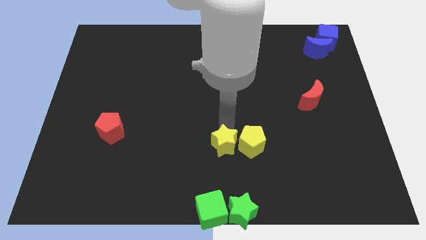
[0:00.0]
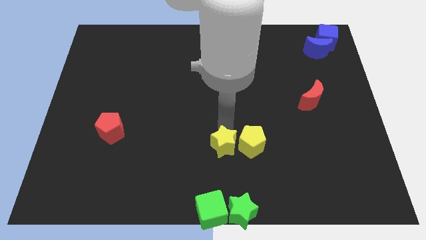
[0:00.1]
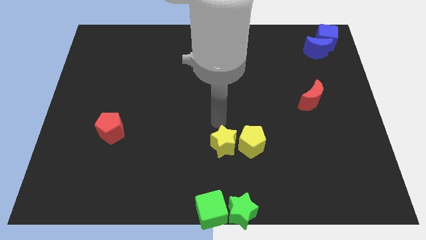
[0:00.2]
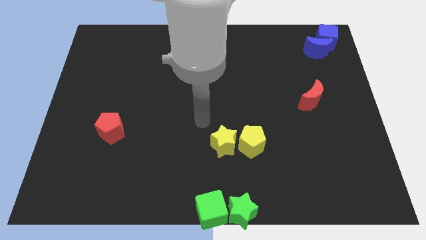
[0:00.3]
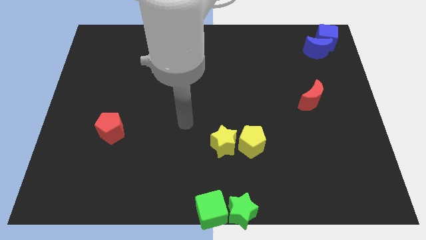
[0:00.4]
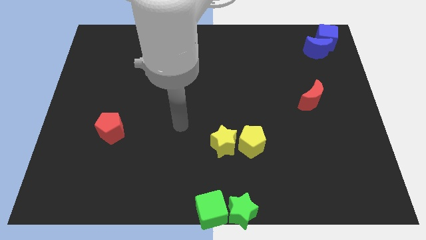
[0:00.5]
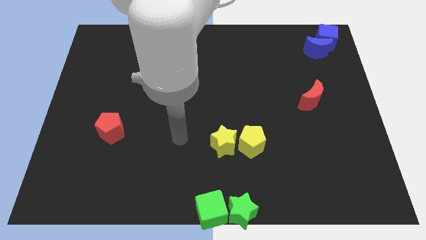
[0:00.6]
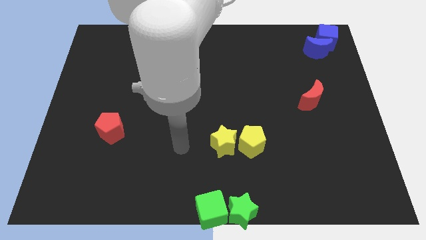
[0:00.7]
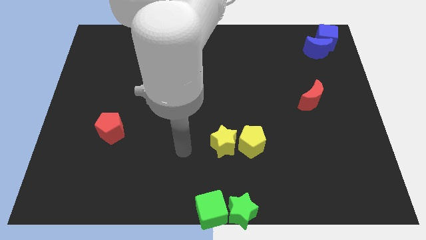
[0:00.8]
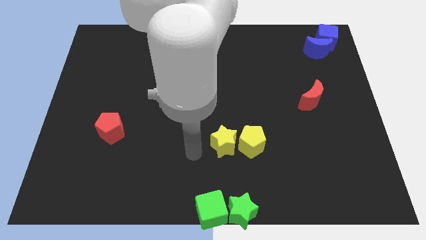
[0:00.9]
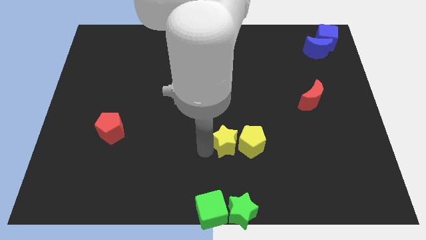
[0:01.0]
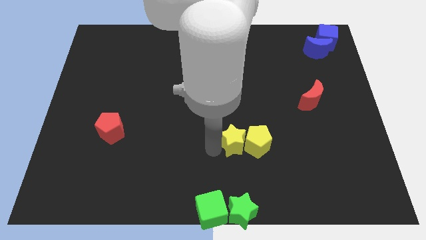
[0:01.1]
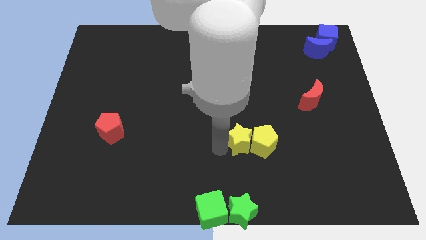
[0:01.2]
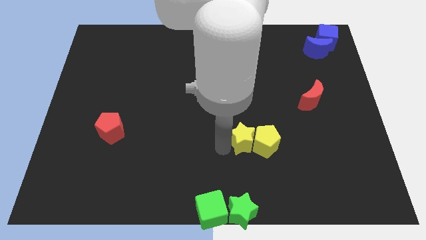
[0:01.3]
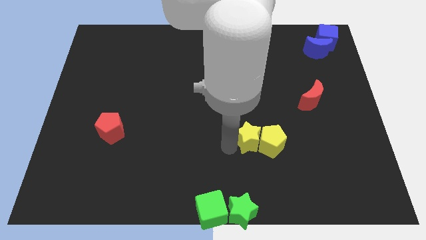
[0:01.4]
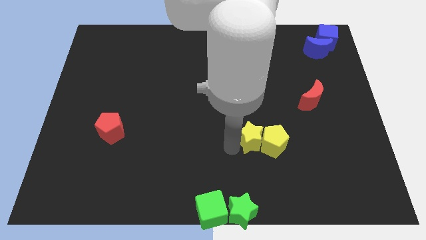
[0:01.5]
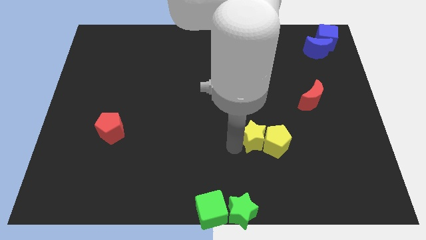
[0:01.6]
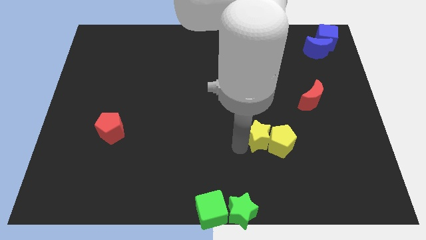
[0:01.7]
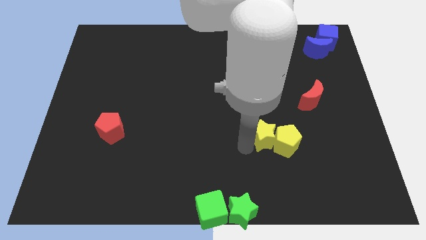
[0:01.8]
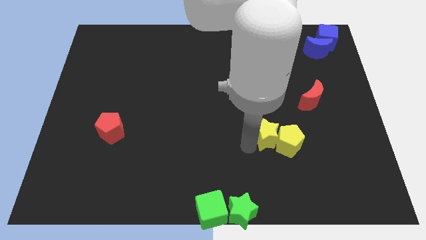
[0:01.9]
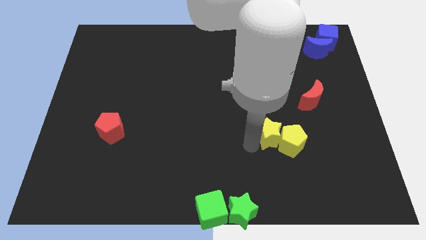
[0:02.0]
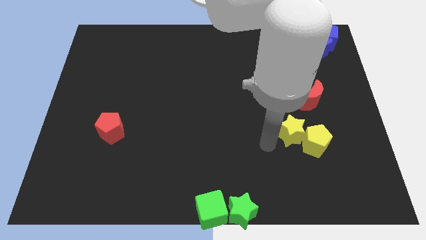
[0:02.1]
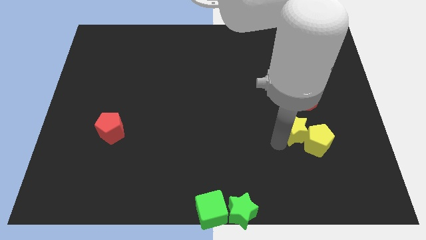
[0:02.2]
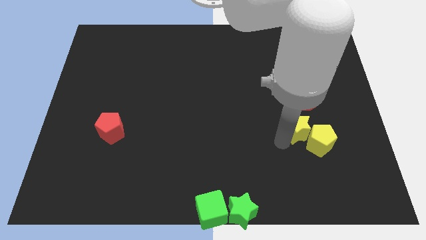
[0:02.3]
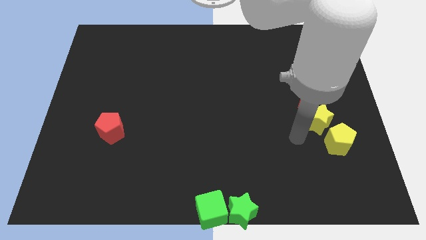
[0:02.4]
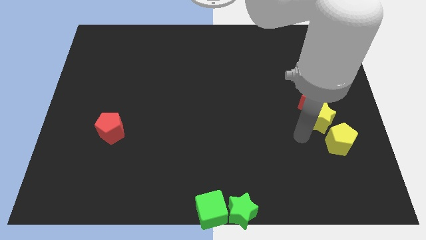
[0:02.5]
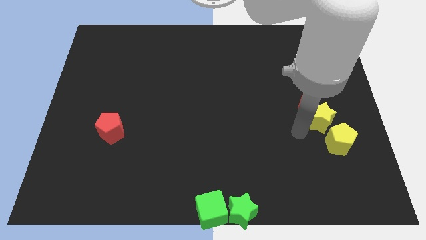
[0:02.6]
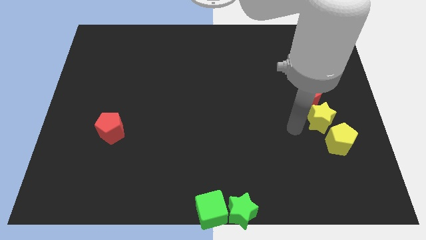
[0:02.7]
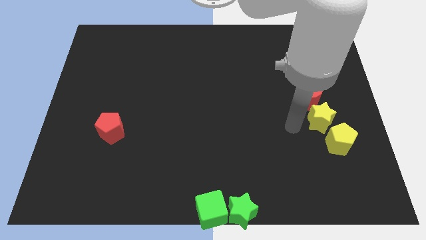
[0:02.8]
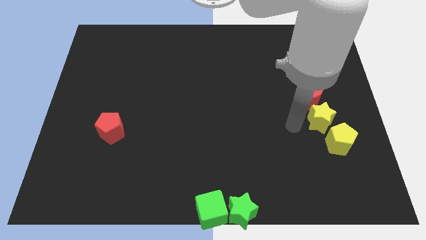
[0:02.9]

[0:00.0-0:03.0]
move the yellow blocks below the red moon

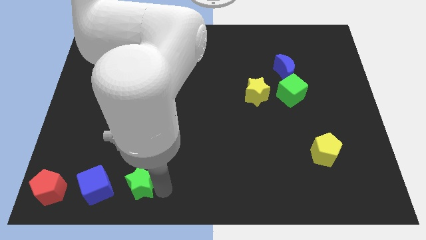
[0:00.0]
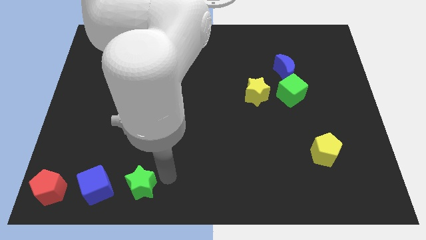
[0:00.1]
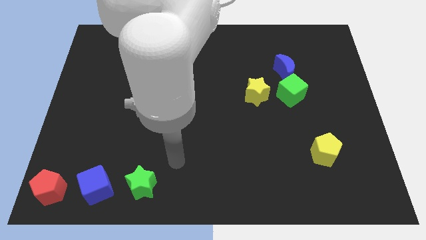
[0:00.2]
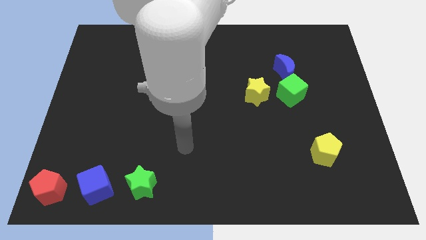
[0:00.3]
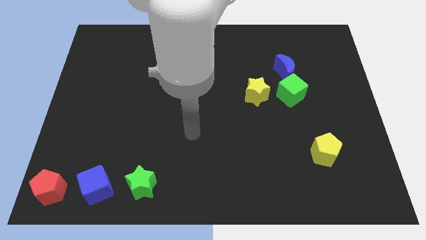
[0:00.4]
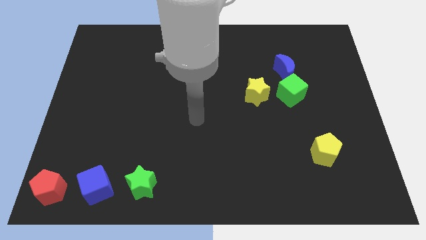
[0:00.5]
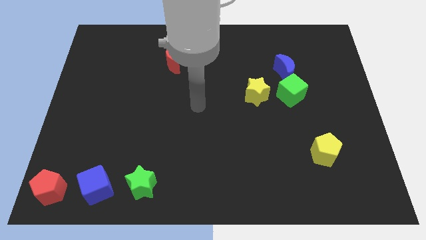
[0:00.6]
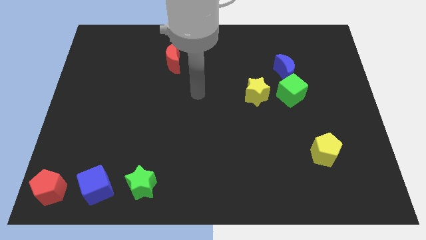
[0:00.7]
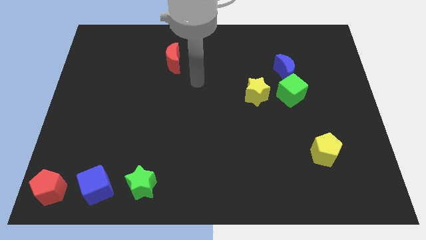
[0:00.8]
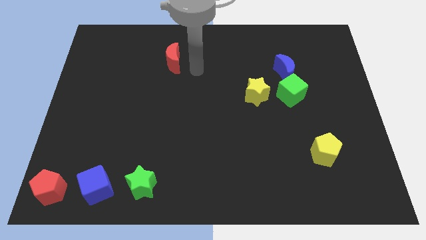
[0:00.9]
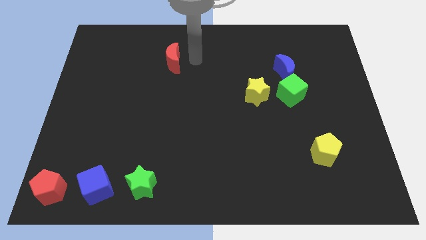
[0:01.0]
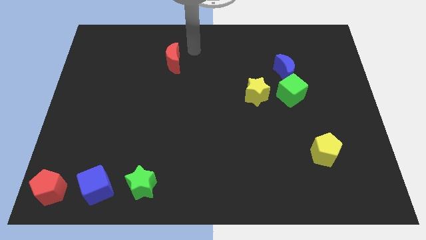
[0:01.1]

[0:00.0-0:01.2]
place your arm on the right side of red crescent
